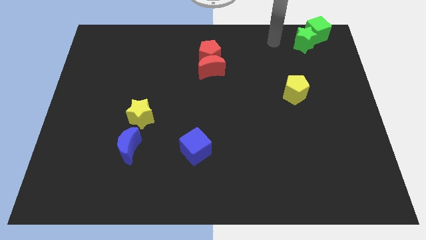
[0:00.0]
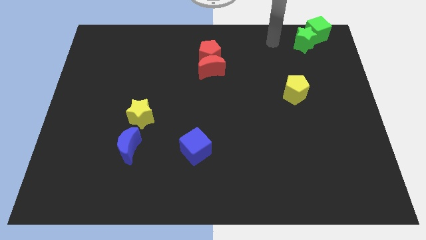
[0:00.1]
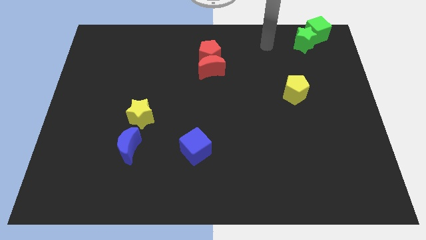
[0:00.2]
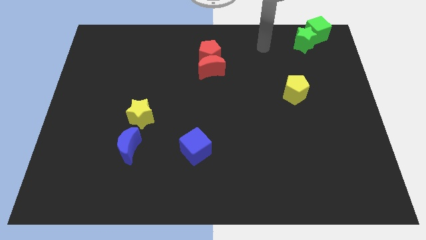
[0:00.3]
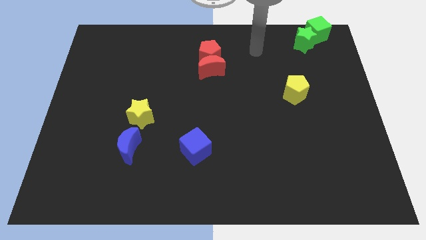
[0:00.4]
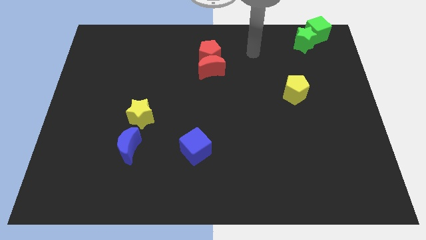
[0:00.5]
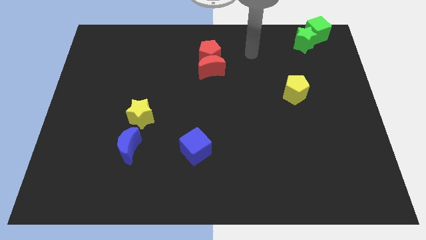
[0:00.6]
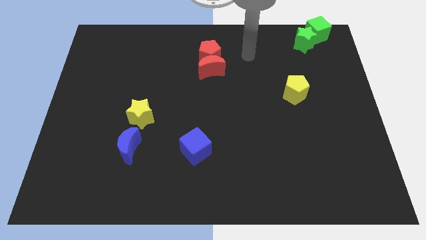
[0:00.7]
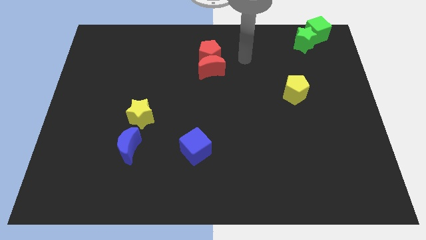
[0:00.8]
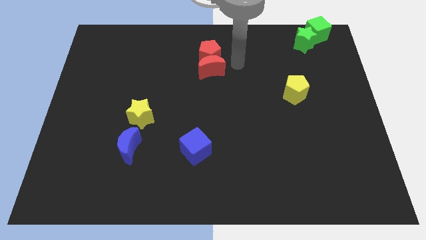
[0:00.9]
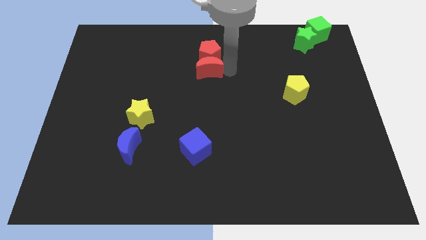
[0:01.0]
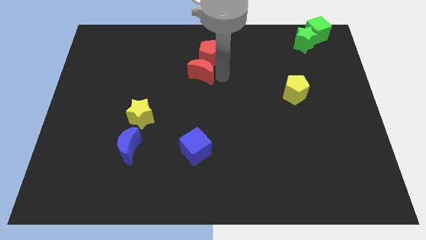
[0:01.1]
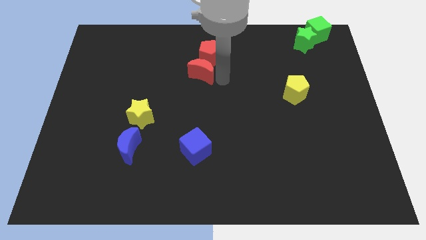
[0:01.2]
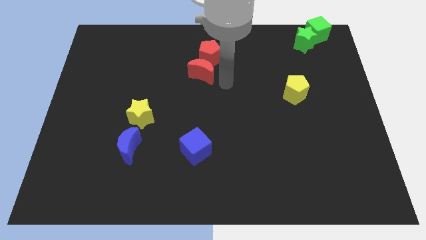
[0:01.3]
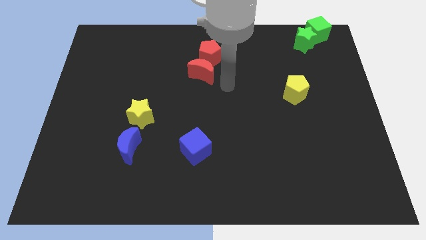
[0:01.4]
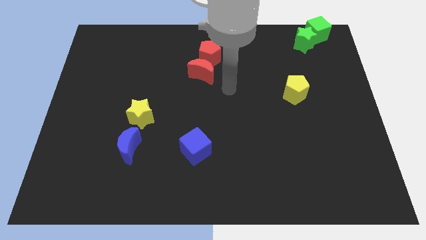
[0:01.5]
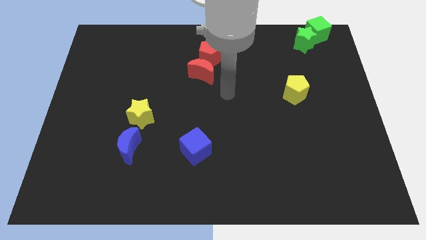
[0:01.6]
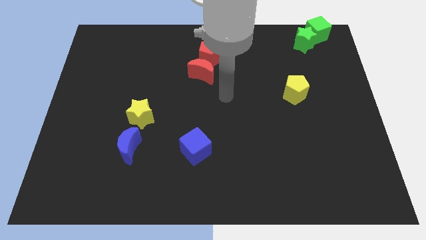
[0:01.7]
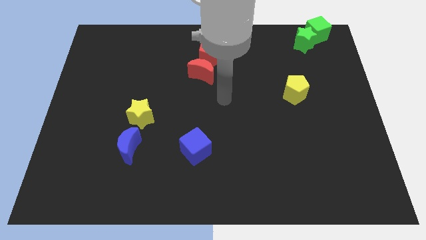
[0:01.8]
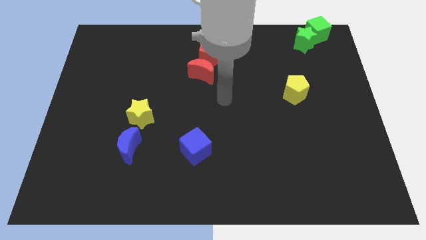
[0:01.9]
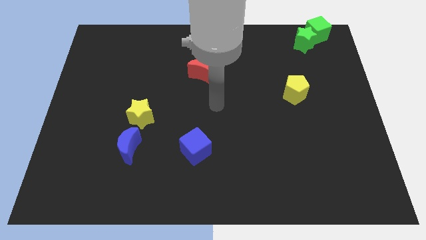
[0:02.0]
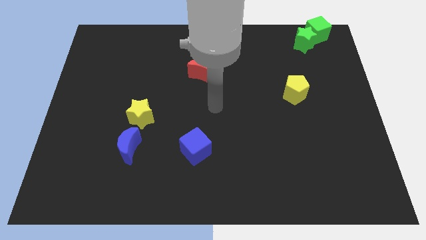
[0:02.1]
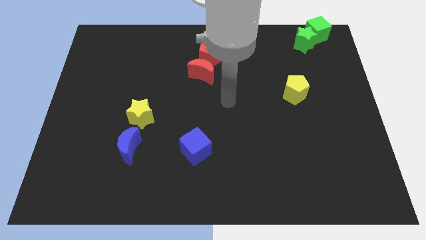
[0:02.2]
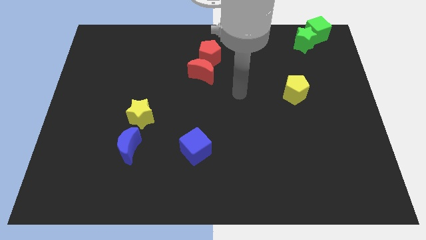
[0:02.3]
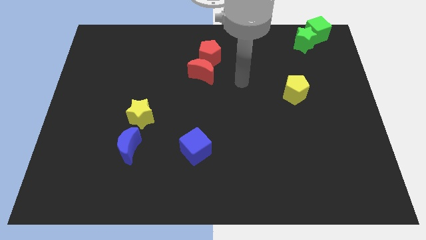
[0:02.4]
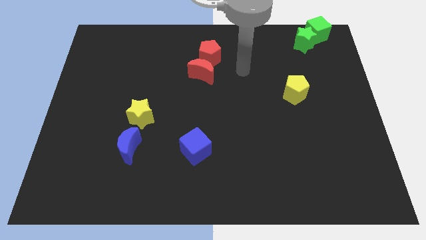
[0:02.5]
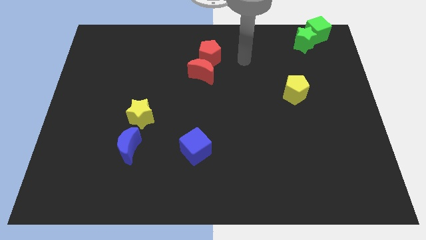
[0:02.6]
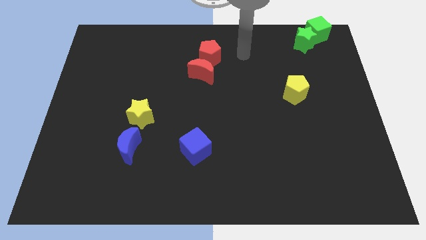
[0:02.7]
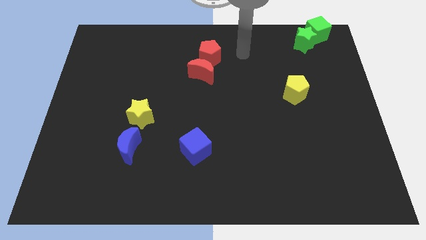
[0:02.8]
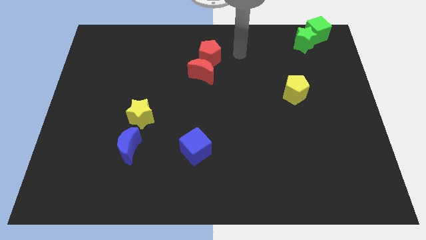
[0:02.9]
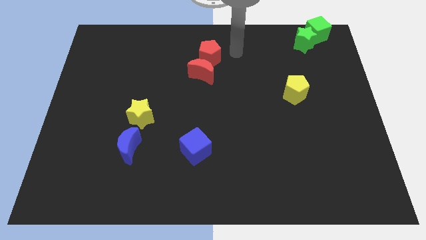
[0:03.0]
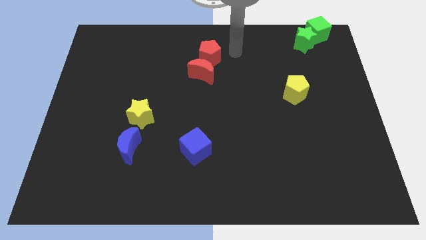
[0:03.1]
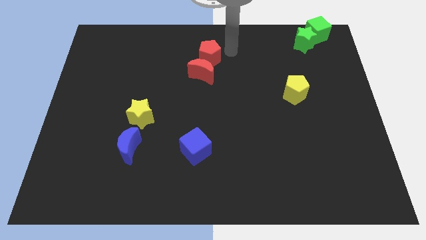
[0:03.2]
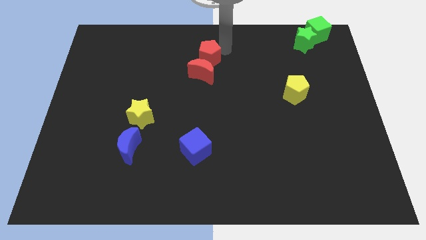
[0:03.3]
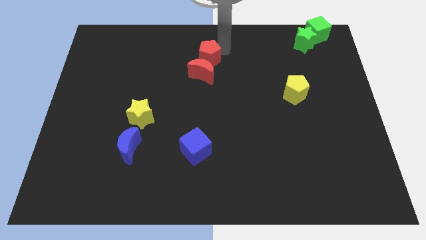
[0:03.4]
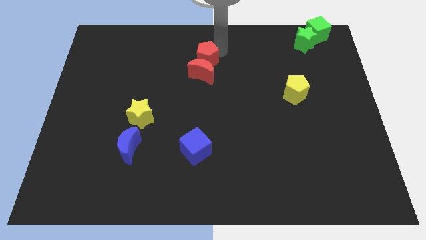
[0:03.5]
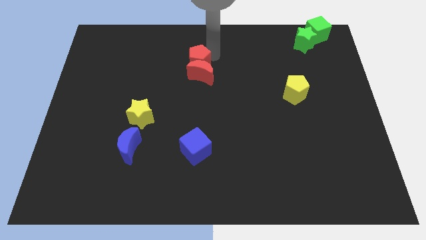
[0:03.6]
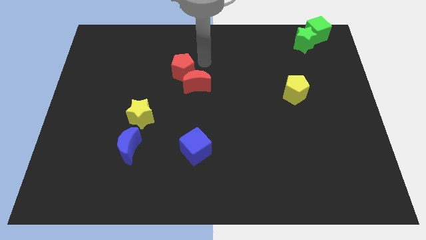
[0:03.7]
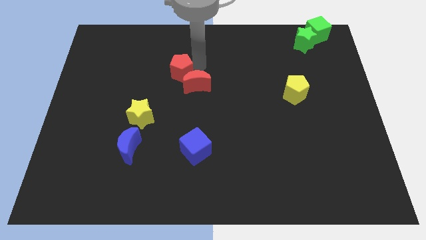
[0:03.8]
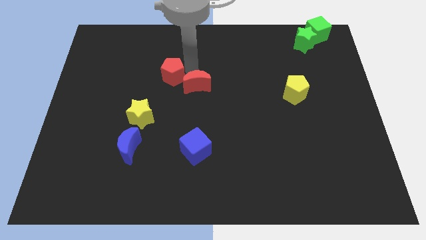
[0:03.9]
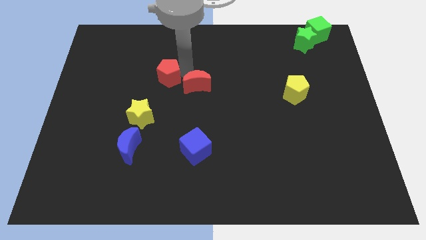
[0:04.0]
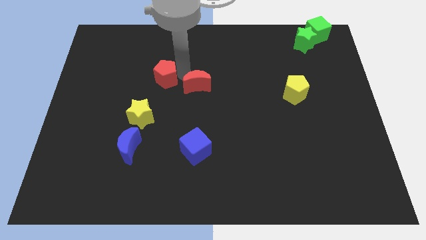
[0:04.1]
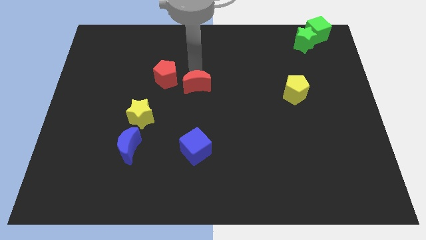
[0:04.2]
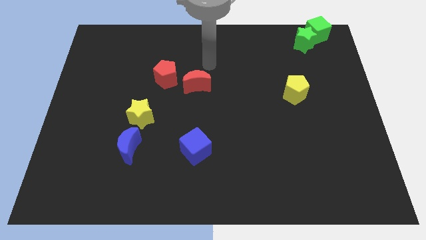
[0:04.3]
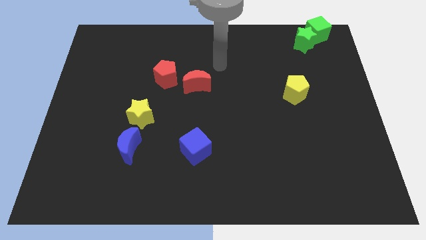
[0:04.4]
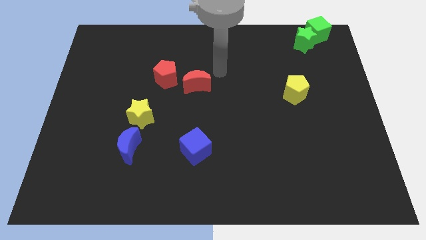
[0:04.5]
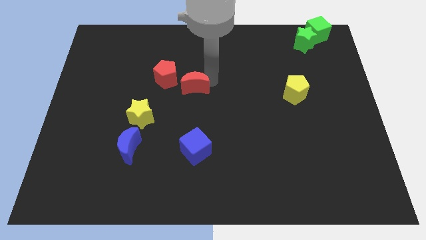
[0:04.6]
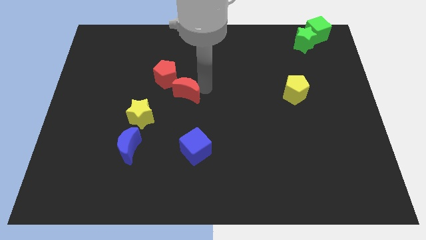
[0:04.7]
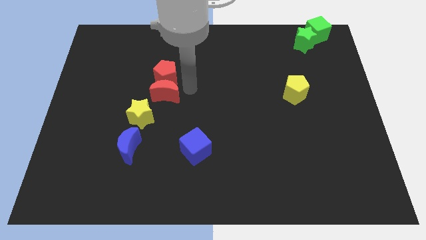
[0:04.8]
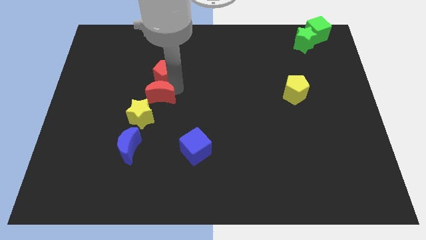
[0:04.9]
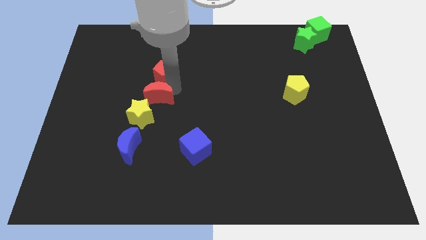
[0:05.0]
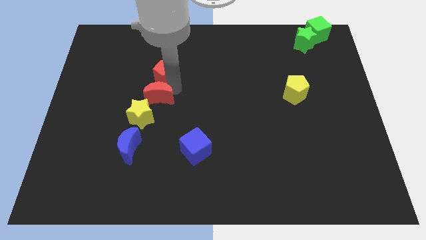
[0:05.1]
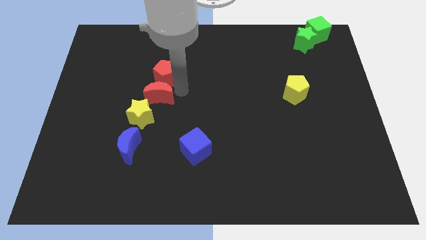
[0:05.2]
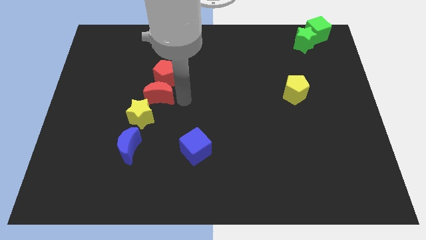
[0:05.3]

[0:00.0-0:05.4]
push the red pentagon and red moon to the bottom side

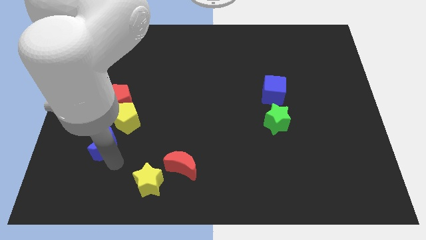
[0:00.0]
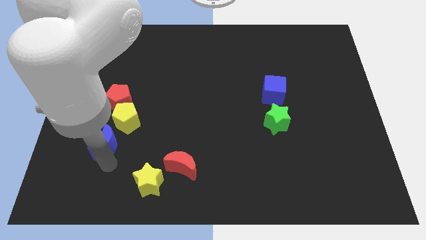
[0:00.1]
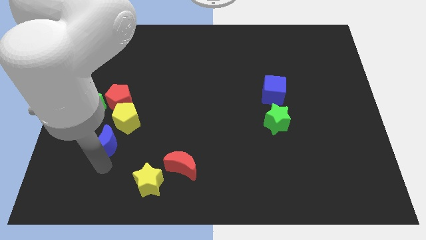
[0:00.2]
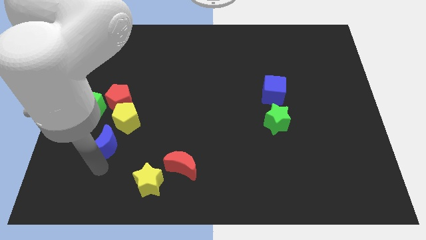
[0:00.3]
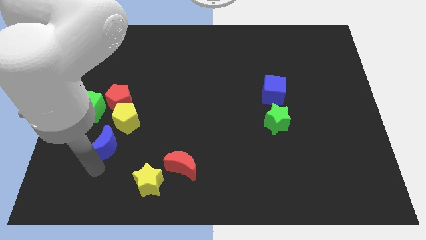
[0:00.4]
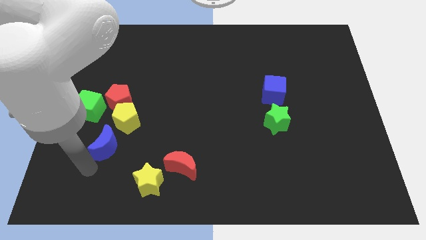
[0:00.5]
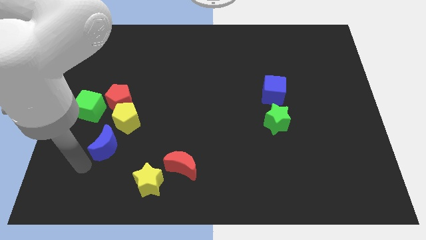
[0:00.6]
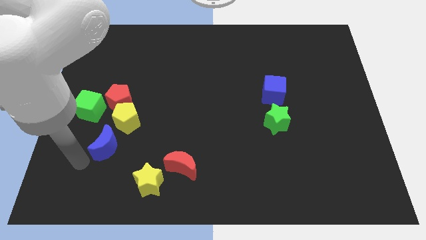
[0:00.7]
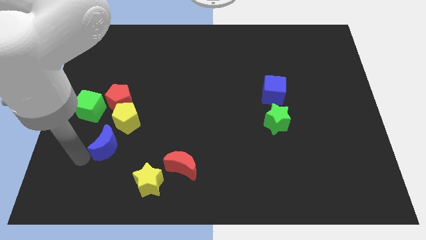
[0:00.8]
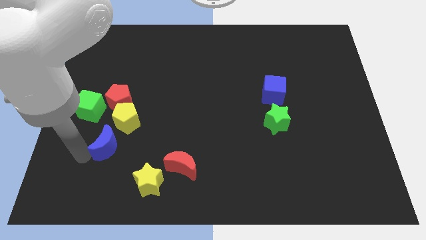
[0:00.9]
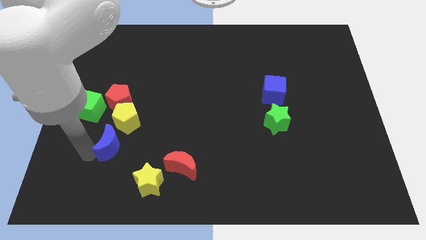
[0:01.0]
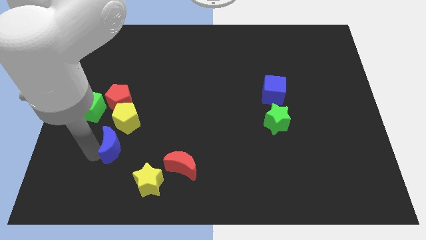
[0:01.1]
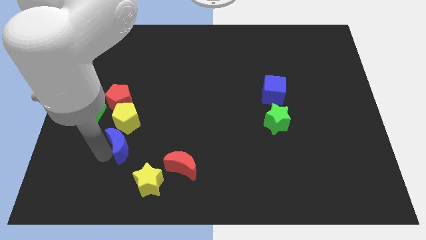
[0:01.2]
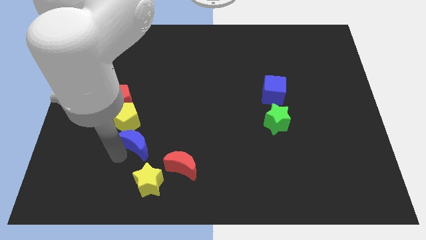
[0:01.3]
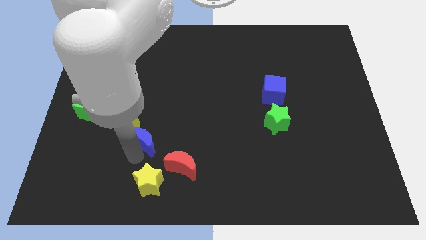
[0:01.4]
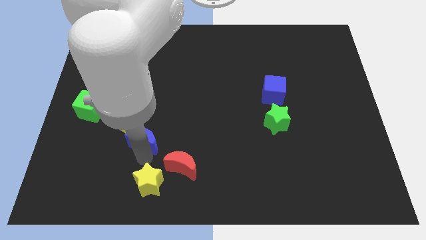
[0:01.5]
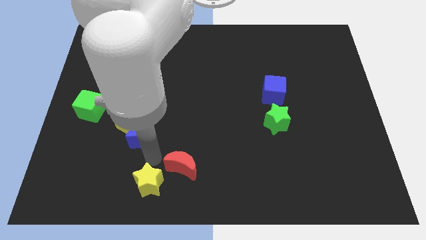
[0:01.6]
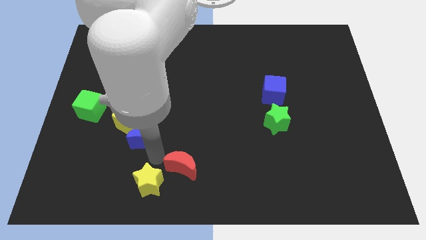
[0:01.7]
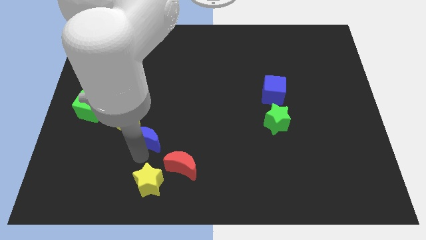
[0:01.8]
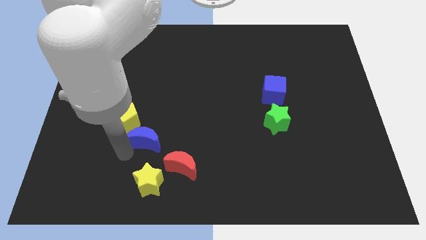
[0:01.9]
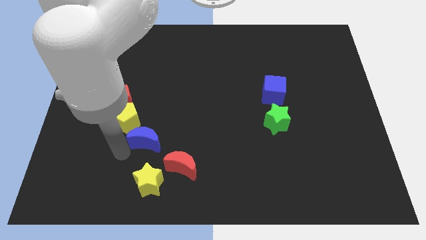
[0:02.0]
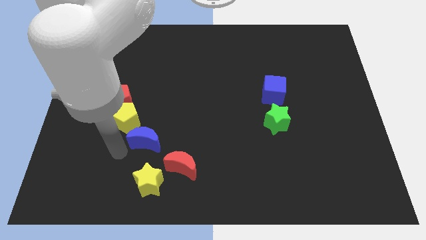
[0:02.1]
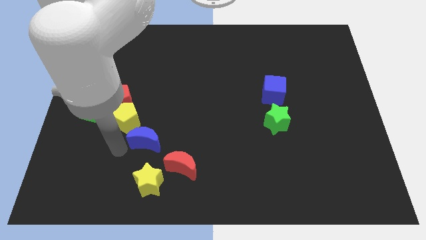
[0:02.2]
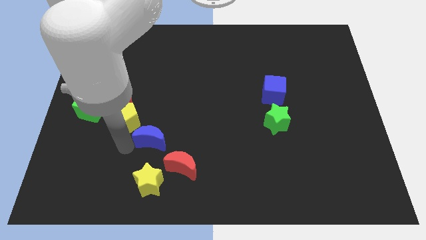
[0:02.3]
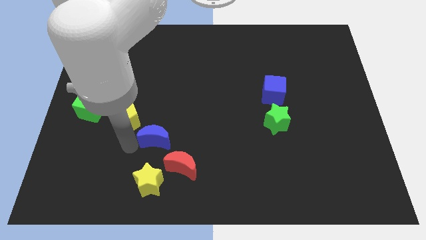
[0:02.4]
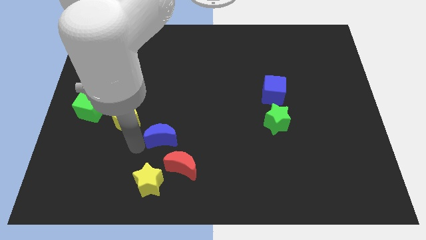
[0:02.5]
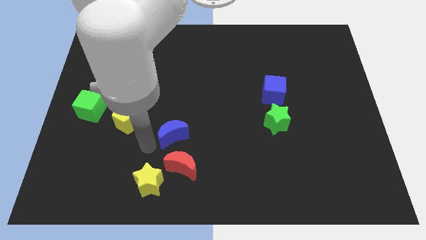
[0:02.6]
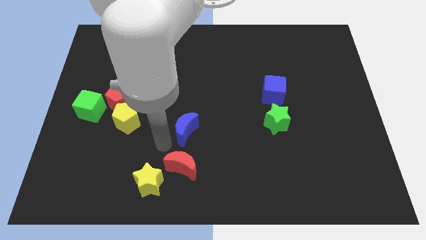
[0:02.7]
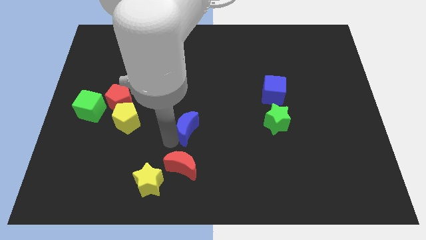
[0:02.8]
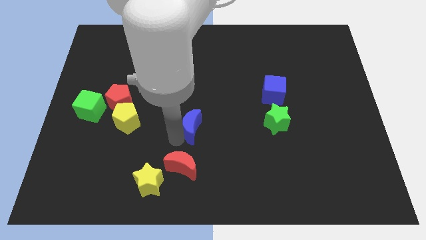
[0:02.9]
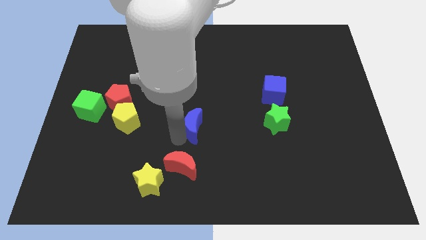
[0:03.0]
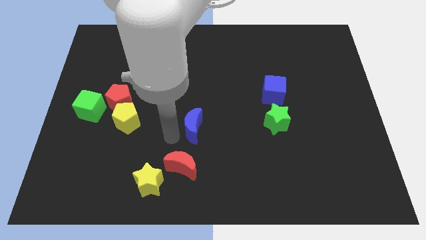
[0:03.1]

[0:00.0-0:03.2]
slide the blue moon diagonally top right to the yellow star

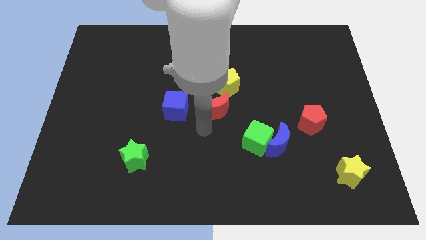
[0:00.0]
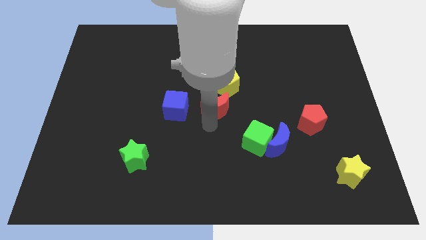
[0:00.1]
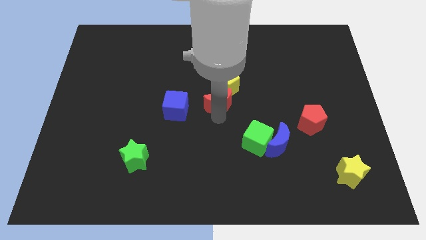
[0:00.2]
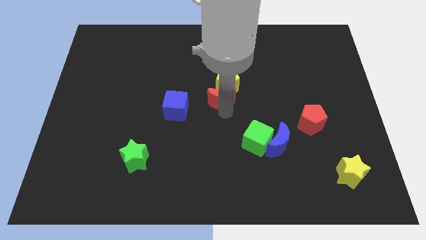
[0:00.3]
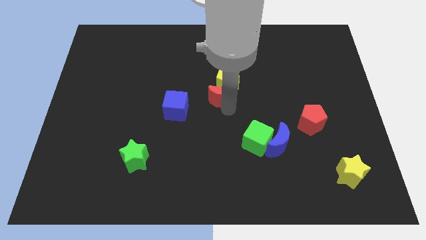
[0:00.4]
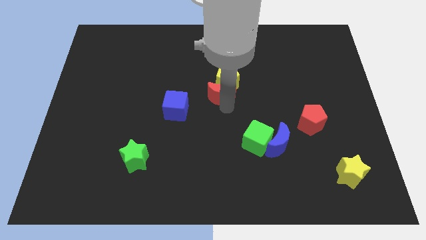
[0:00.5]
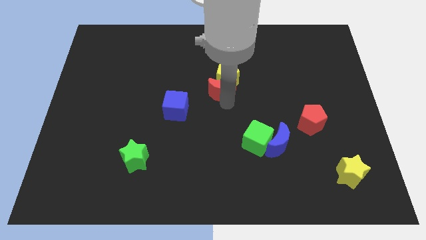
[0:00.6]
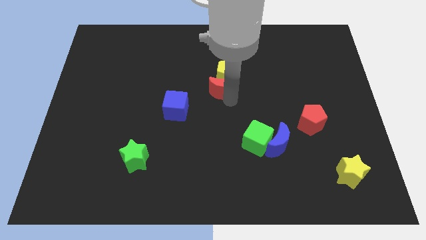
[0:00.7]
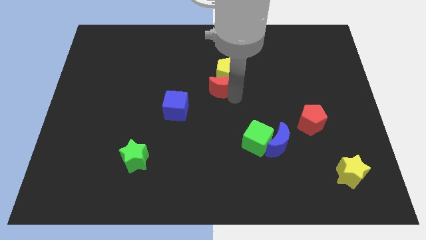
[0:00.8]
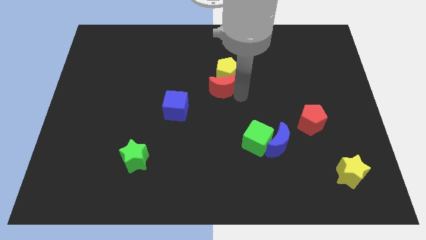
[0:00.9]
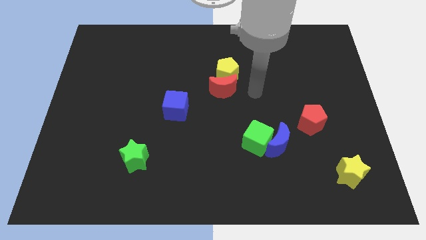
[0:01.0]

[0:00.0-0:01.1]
push red moon into yellow pentagon
